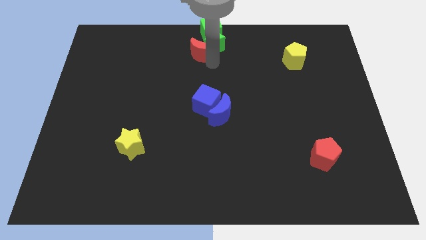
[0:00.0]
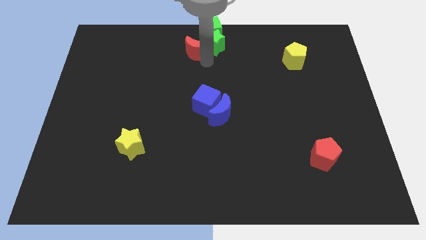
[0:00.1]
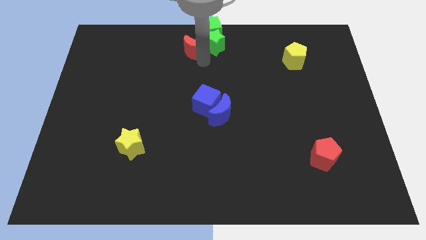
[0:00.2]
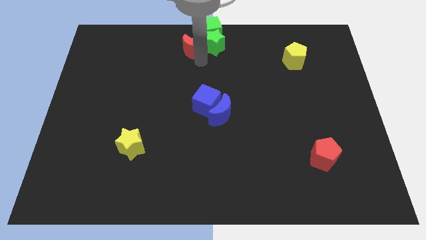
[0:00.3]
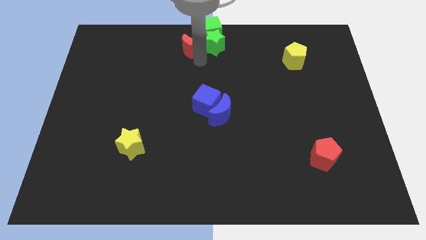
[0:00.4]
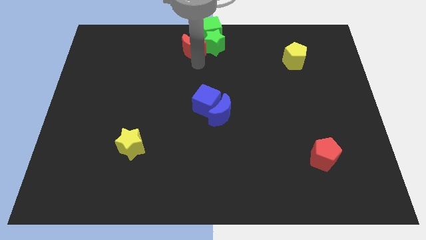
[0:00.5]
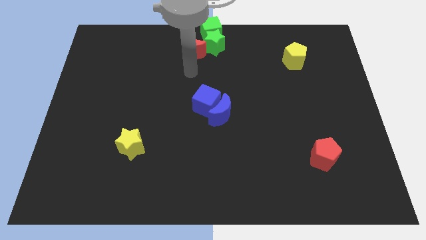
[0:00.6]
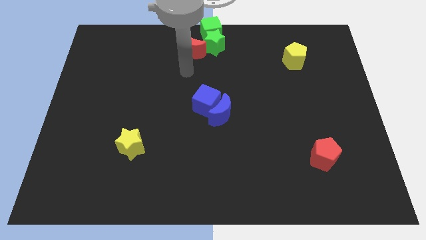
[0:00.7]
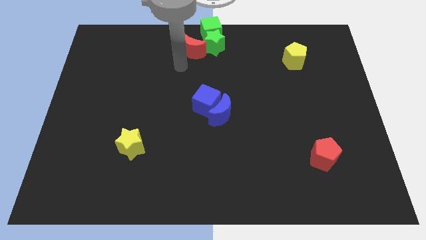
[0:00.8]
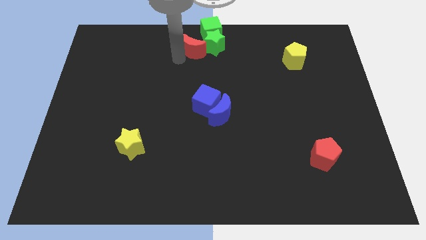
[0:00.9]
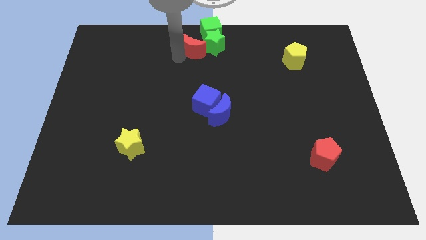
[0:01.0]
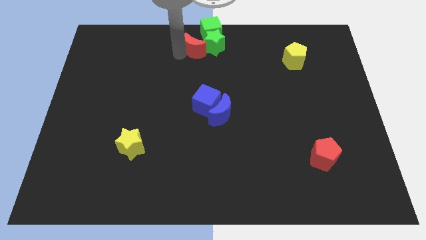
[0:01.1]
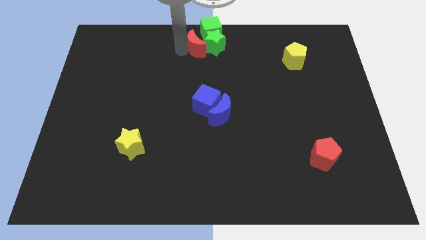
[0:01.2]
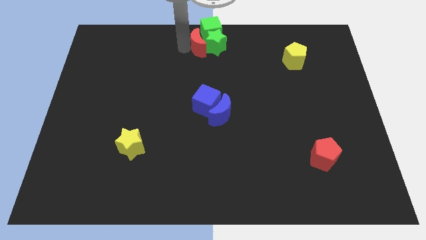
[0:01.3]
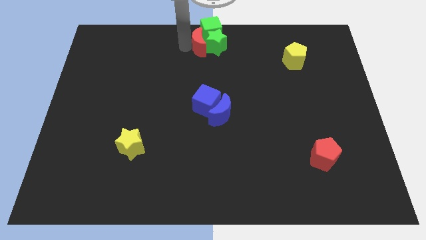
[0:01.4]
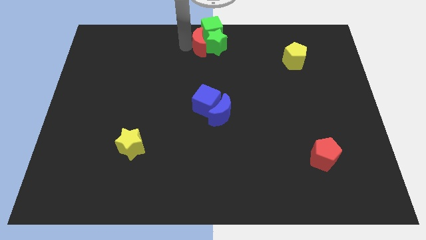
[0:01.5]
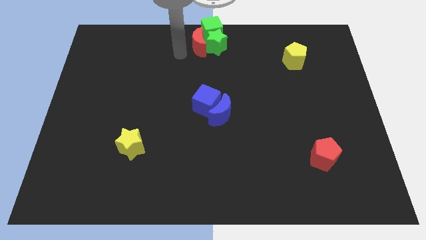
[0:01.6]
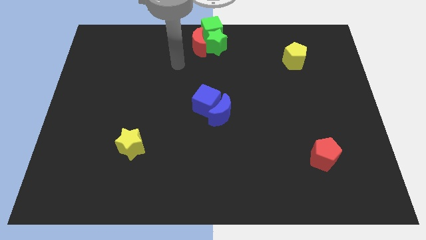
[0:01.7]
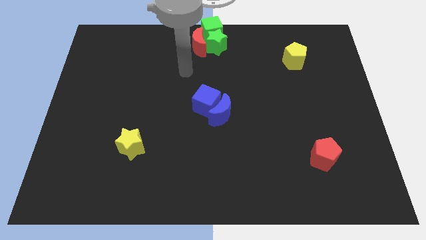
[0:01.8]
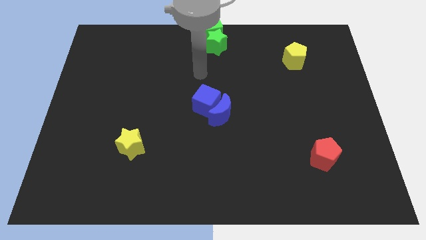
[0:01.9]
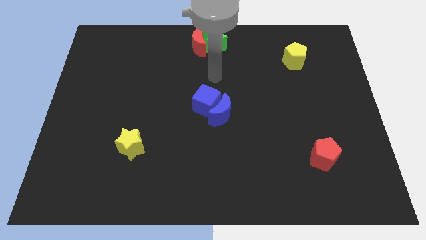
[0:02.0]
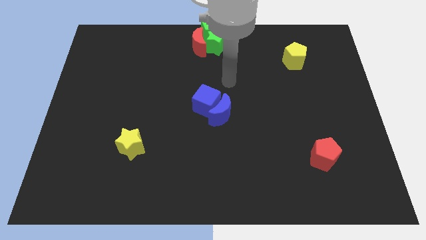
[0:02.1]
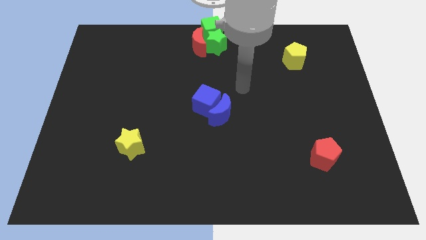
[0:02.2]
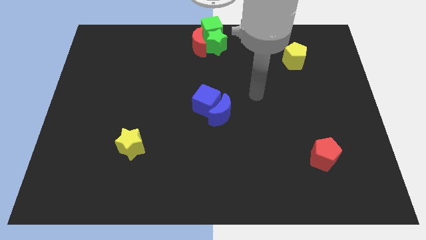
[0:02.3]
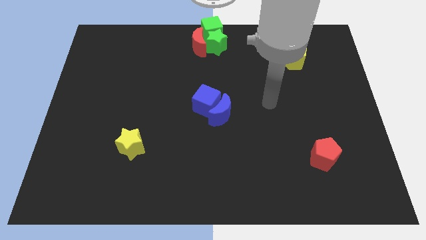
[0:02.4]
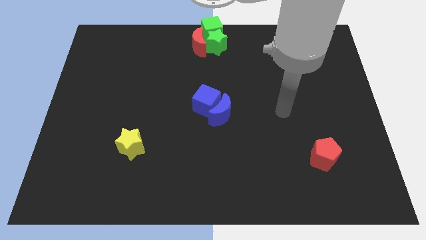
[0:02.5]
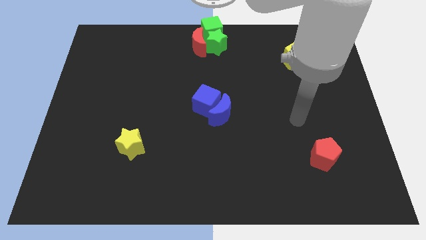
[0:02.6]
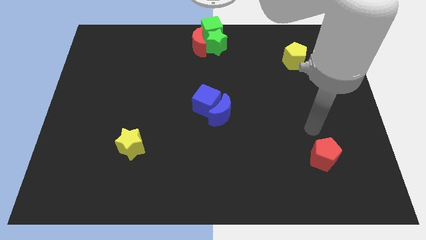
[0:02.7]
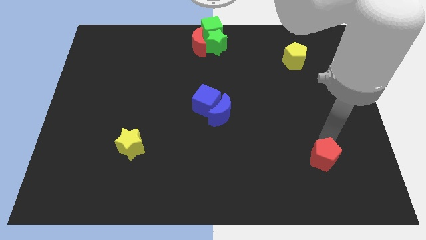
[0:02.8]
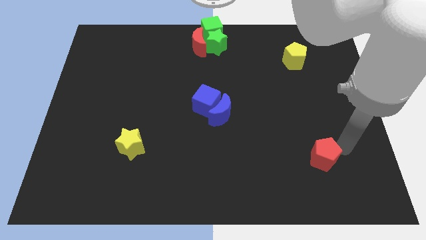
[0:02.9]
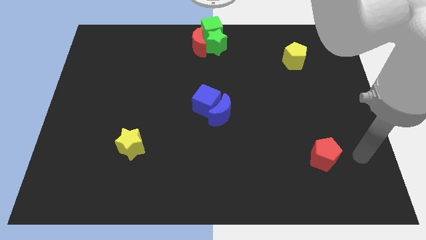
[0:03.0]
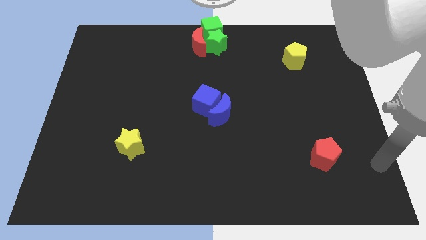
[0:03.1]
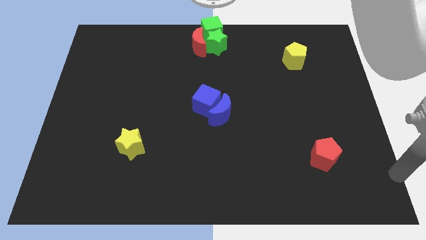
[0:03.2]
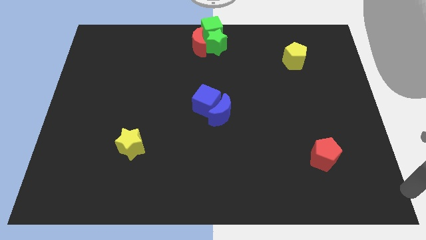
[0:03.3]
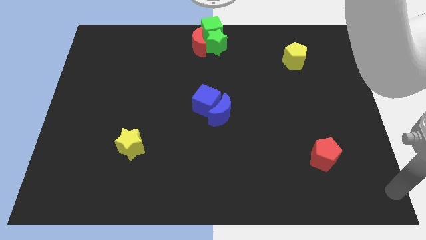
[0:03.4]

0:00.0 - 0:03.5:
place the red moon to the left of the green star

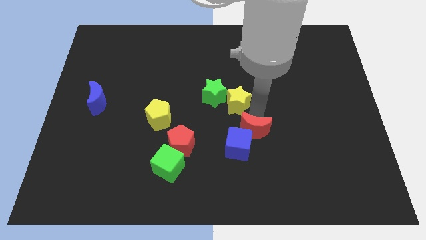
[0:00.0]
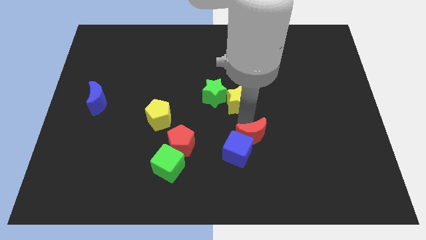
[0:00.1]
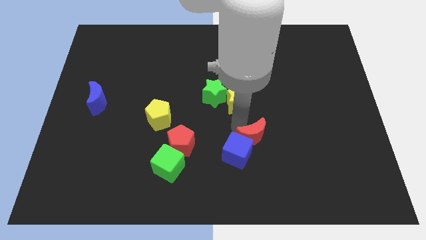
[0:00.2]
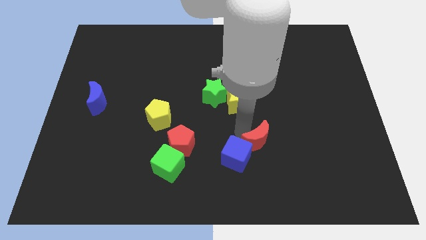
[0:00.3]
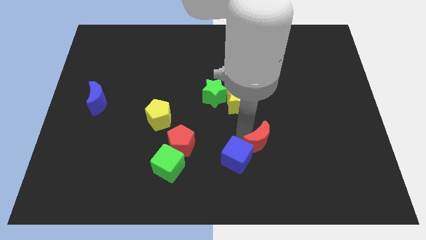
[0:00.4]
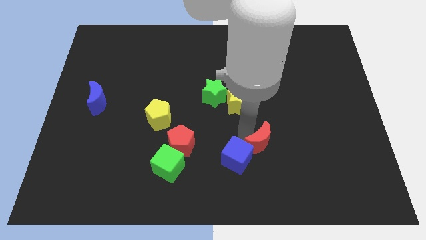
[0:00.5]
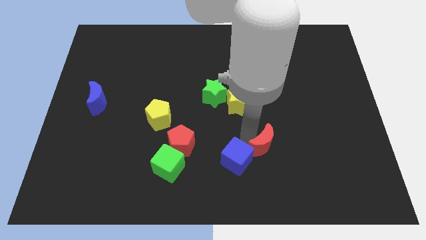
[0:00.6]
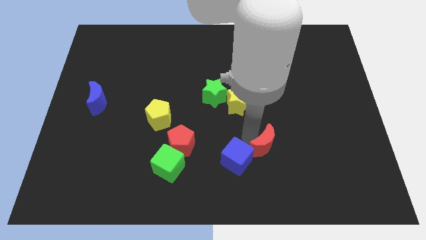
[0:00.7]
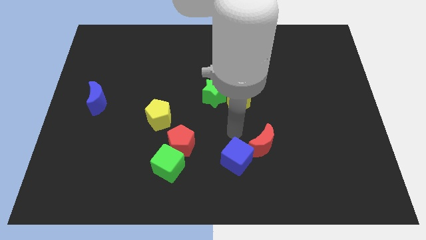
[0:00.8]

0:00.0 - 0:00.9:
move the red crescent slightly to the bottom

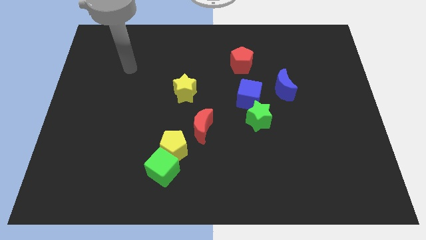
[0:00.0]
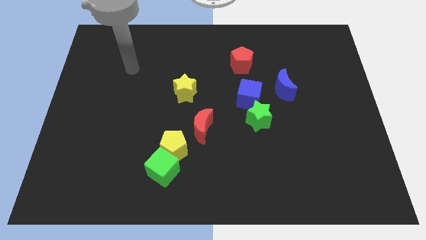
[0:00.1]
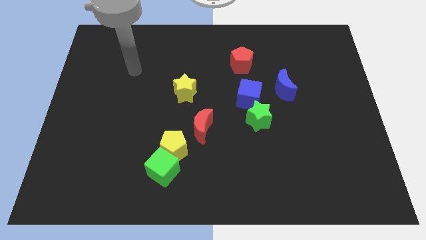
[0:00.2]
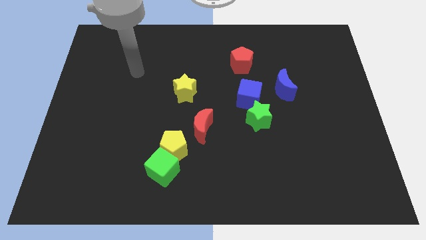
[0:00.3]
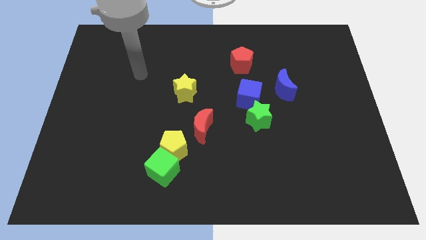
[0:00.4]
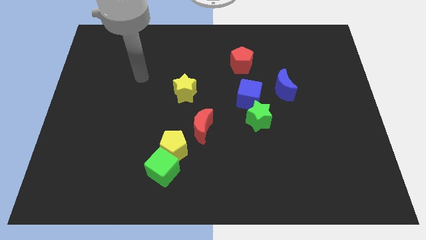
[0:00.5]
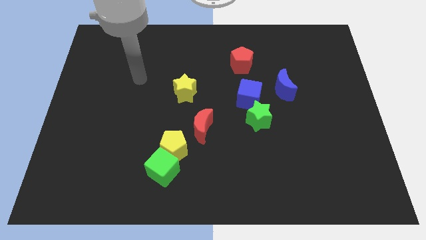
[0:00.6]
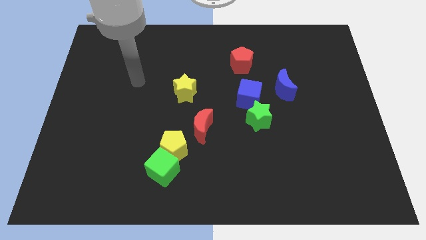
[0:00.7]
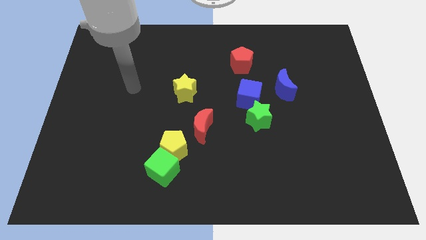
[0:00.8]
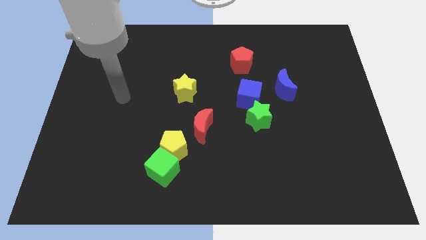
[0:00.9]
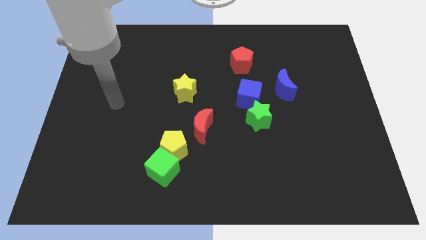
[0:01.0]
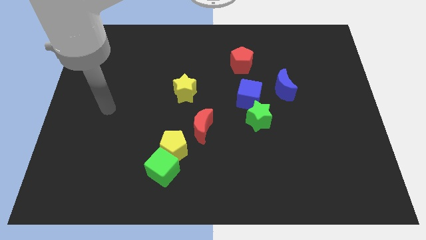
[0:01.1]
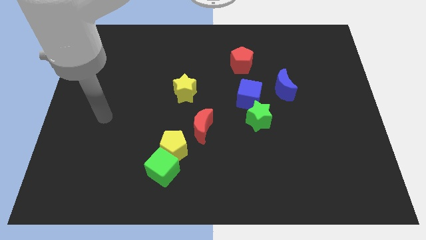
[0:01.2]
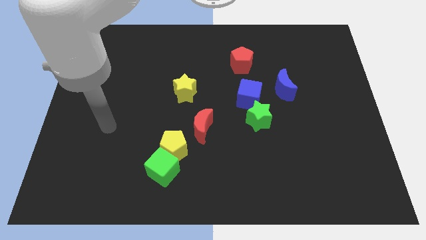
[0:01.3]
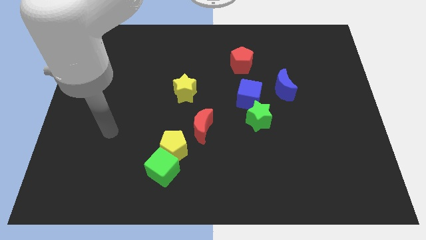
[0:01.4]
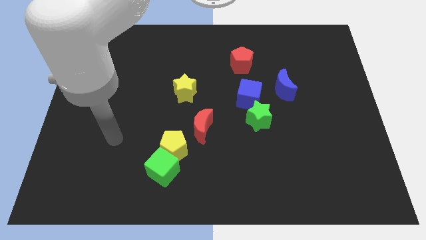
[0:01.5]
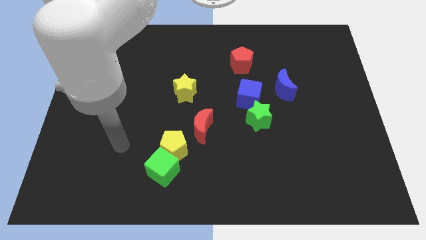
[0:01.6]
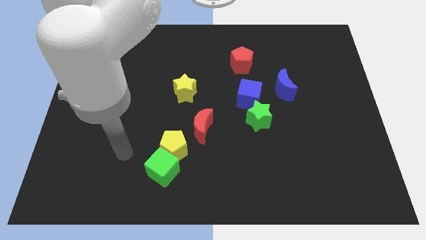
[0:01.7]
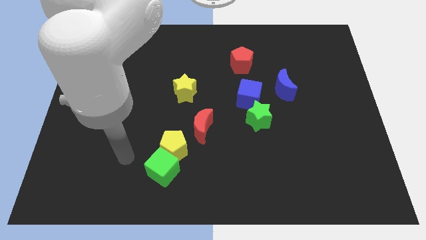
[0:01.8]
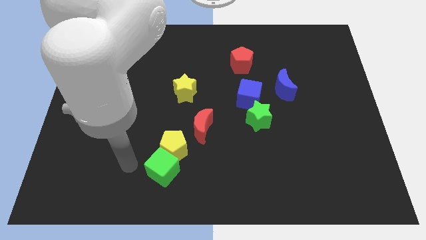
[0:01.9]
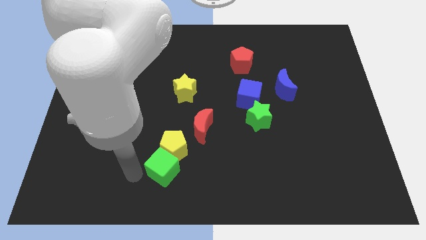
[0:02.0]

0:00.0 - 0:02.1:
point your arm at the left side of the green cube

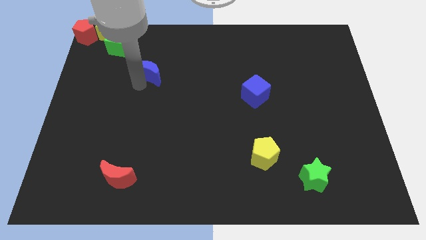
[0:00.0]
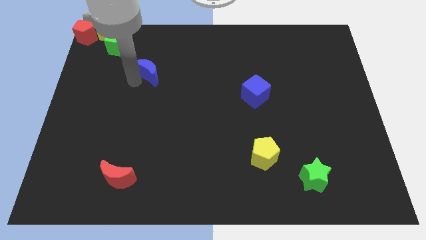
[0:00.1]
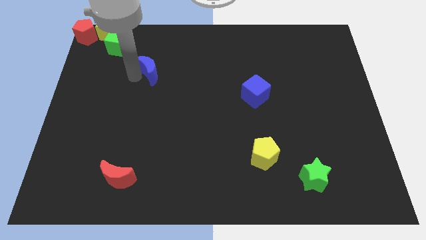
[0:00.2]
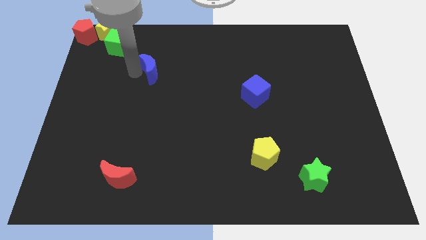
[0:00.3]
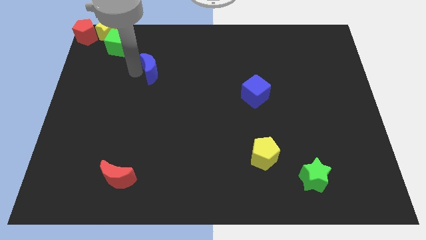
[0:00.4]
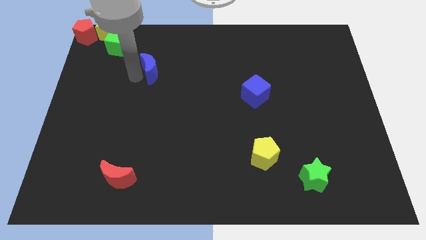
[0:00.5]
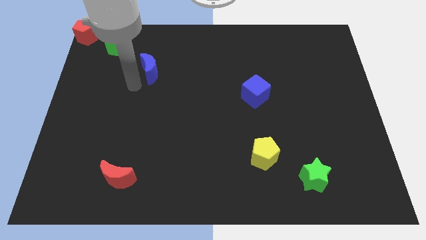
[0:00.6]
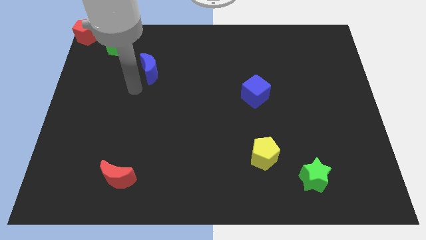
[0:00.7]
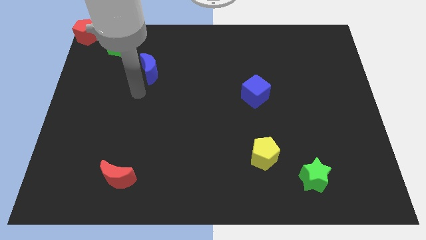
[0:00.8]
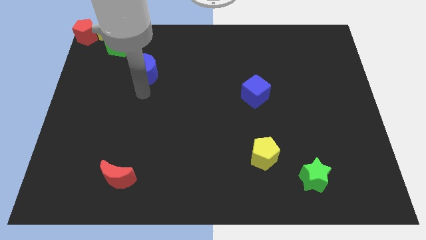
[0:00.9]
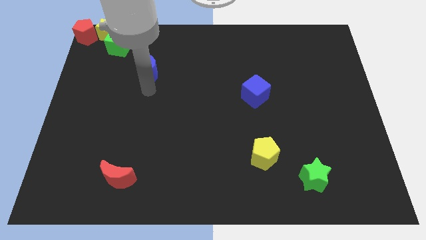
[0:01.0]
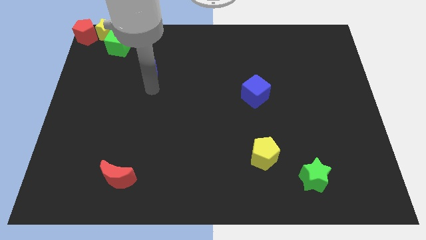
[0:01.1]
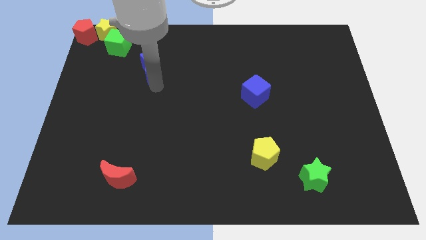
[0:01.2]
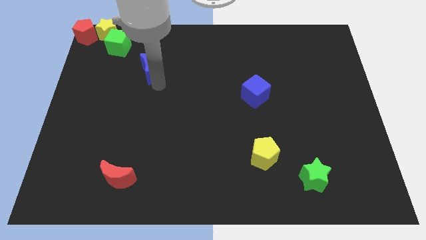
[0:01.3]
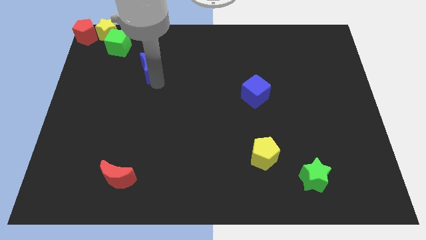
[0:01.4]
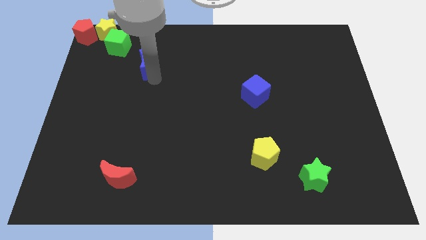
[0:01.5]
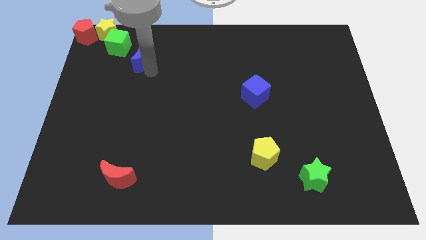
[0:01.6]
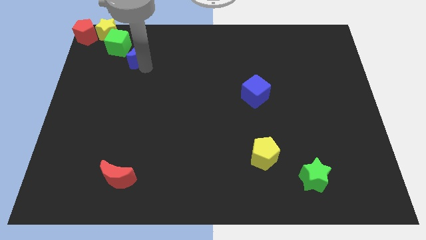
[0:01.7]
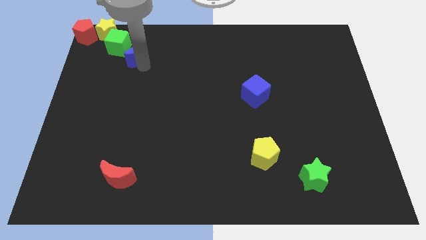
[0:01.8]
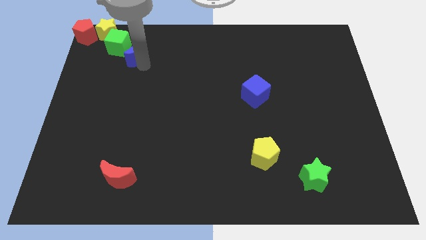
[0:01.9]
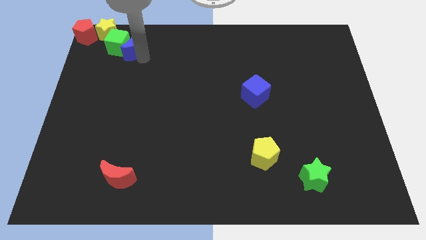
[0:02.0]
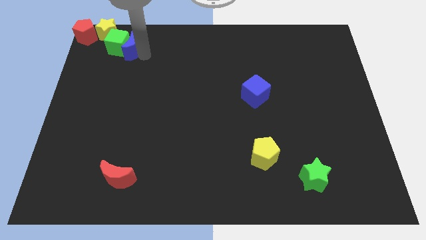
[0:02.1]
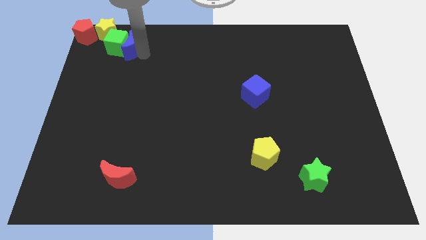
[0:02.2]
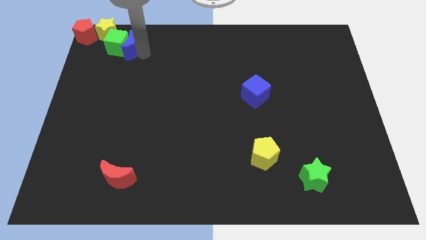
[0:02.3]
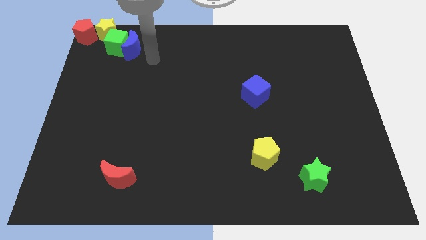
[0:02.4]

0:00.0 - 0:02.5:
push the blue moon into the group of blocks
